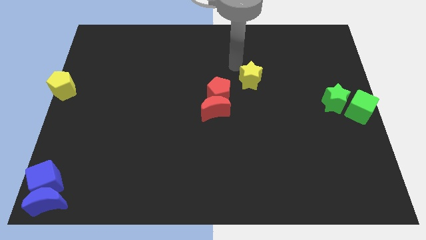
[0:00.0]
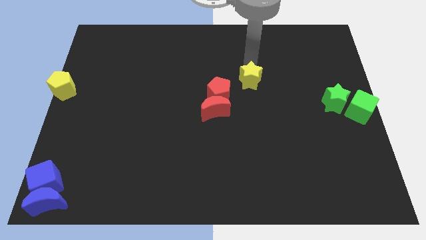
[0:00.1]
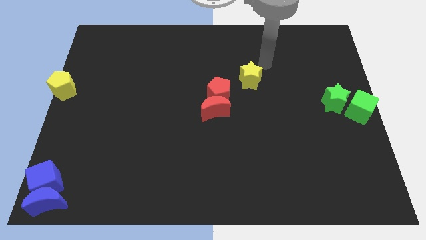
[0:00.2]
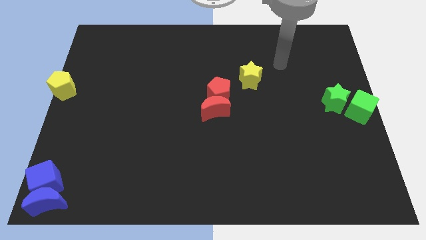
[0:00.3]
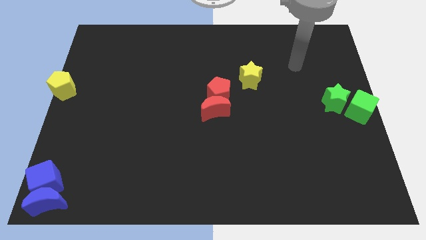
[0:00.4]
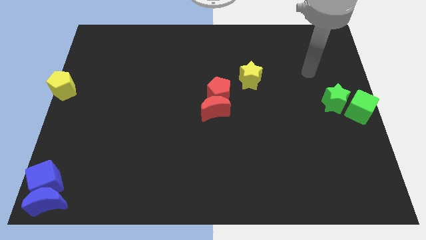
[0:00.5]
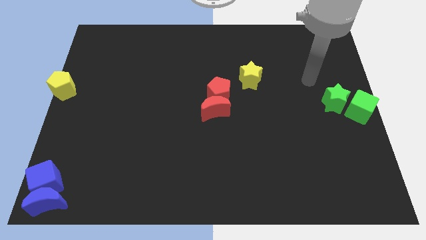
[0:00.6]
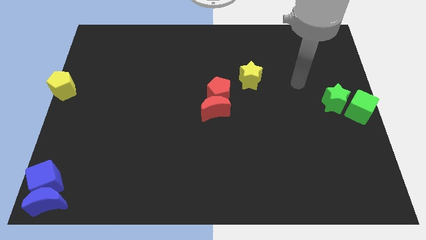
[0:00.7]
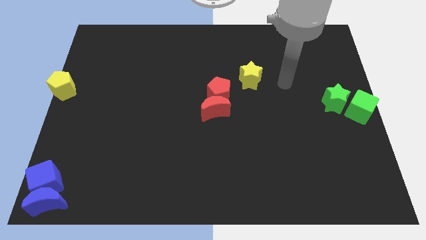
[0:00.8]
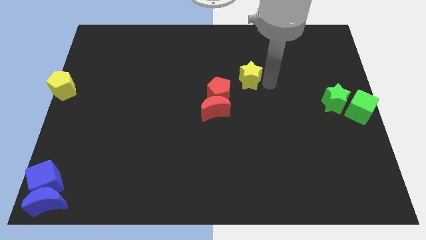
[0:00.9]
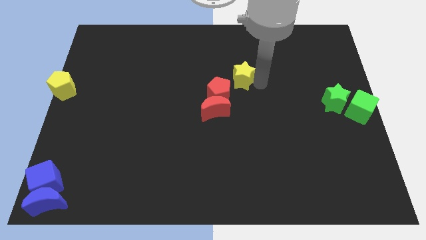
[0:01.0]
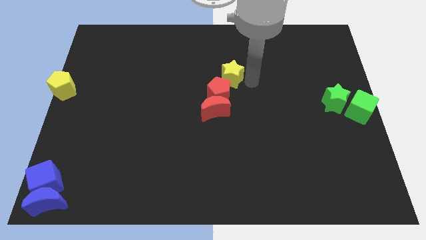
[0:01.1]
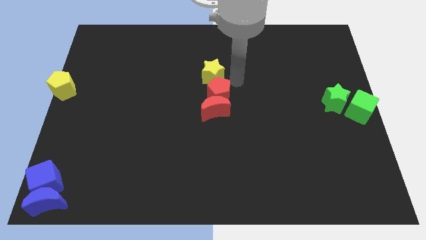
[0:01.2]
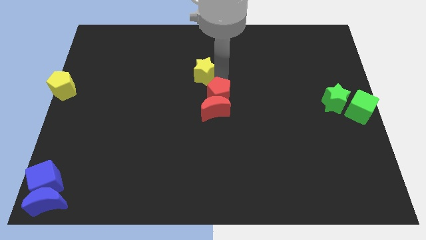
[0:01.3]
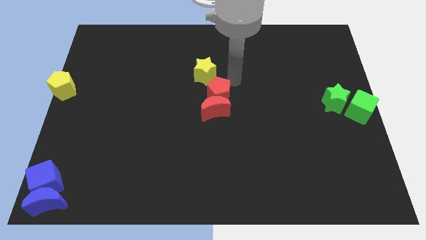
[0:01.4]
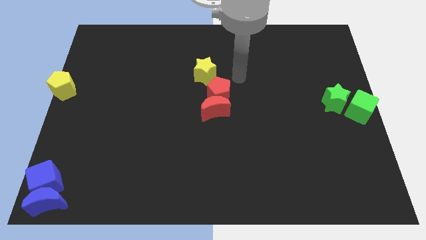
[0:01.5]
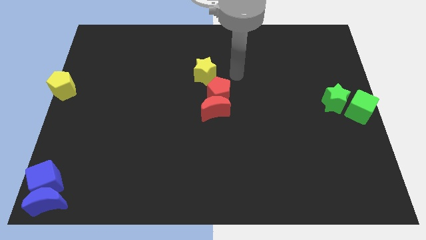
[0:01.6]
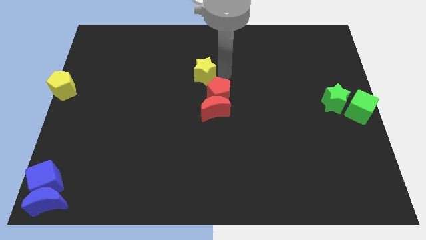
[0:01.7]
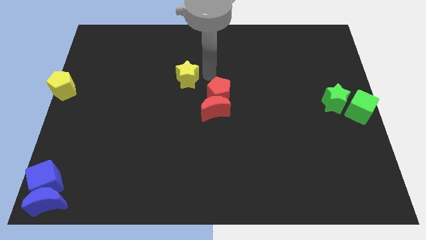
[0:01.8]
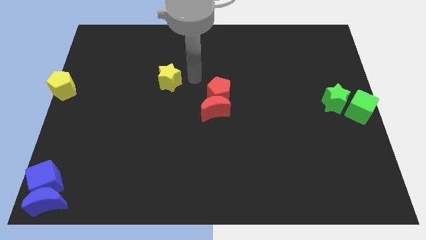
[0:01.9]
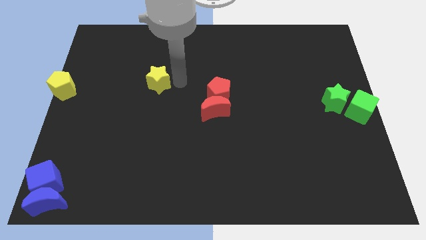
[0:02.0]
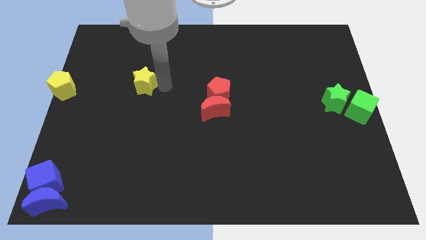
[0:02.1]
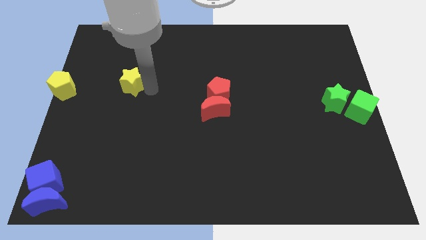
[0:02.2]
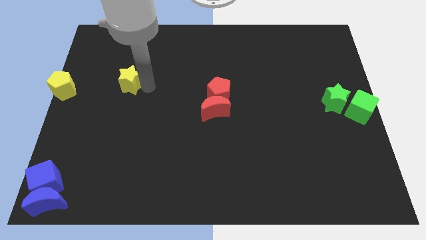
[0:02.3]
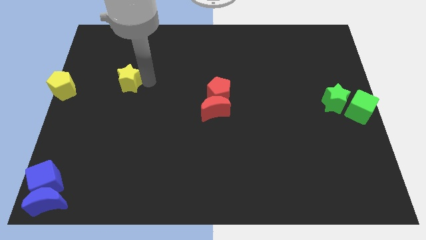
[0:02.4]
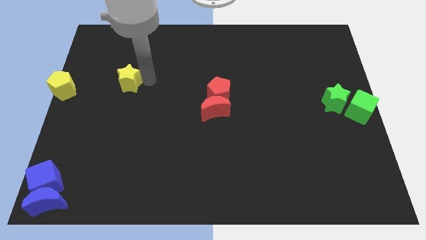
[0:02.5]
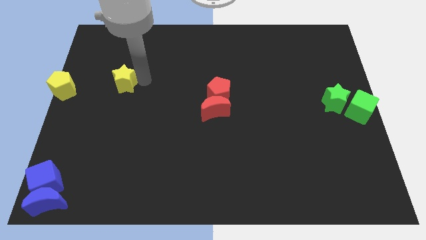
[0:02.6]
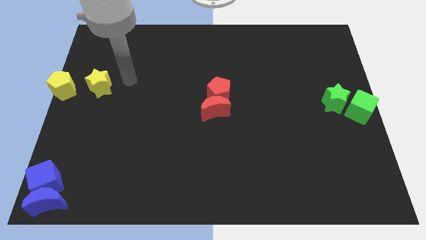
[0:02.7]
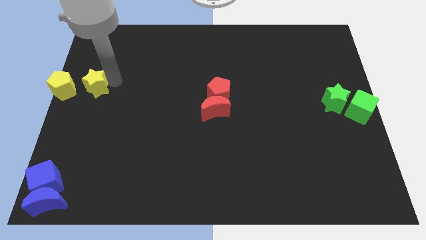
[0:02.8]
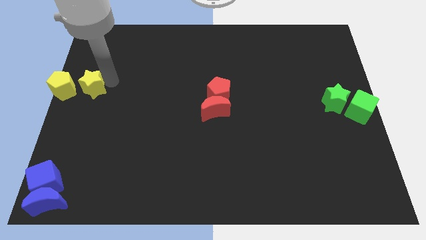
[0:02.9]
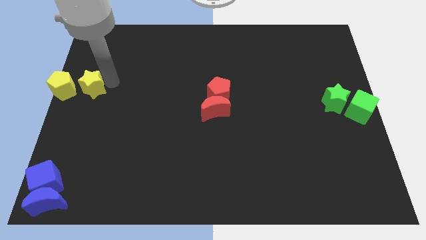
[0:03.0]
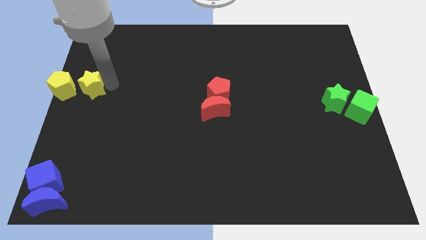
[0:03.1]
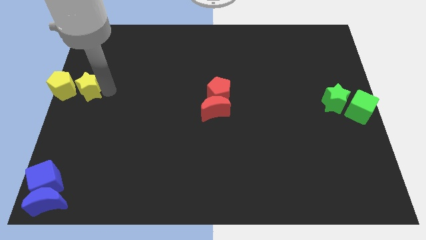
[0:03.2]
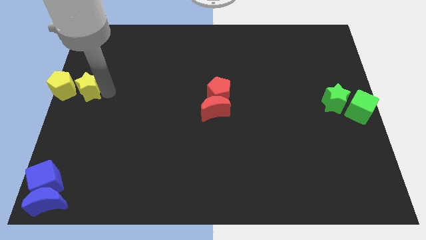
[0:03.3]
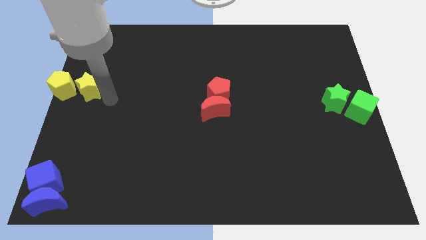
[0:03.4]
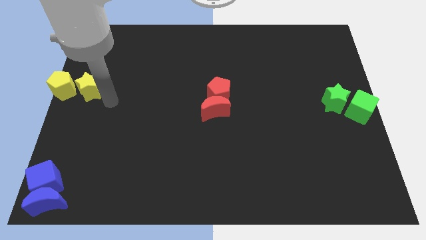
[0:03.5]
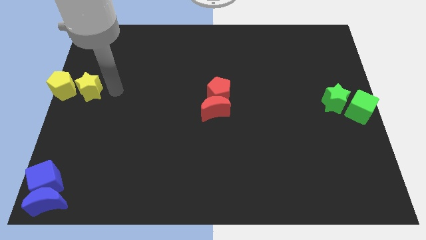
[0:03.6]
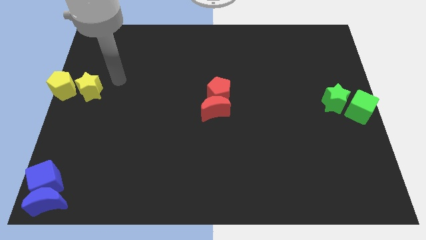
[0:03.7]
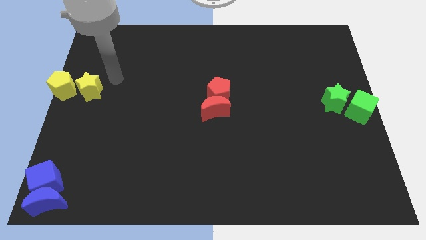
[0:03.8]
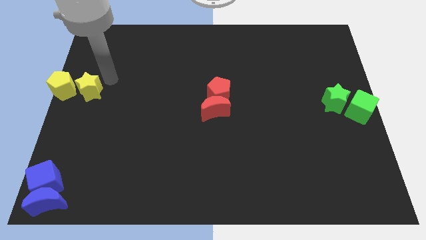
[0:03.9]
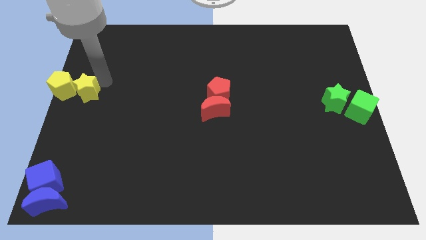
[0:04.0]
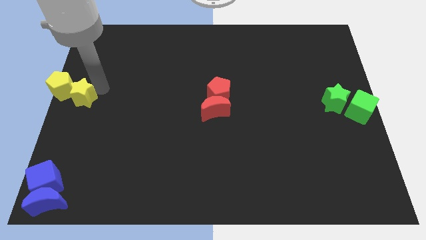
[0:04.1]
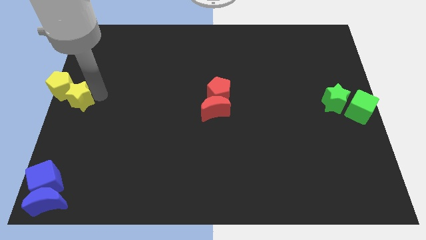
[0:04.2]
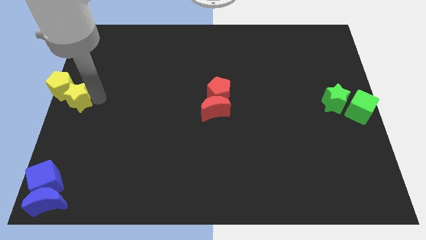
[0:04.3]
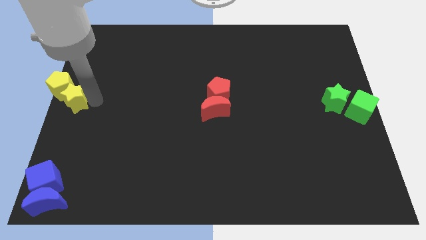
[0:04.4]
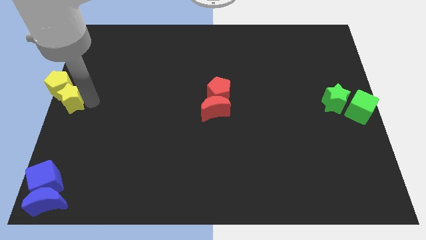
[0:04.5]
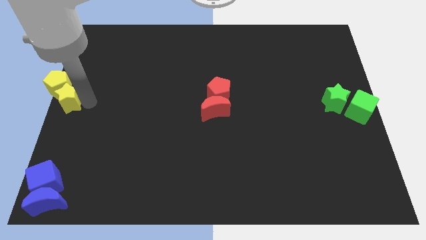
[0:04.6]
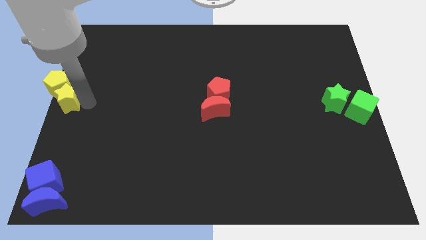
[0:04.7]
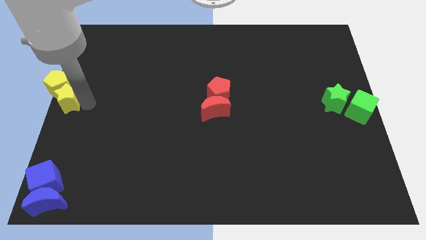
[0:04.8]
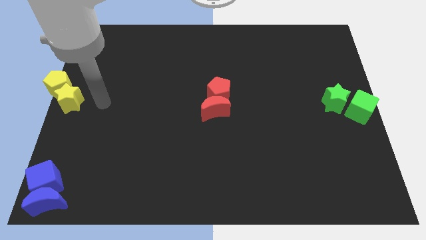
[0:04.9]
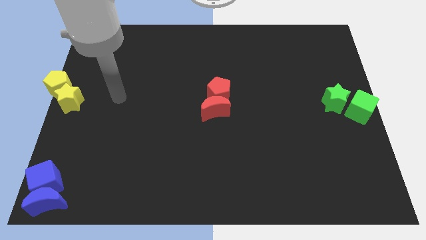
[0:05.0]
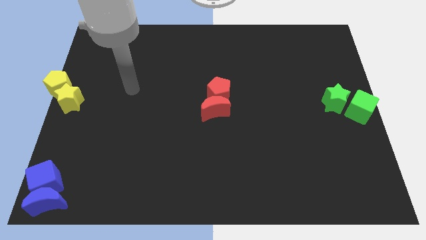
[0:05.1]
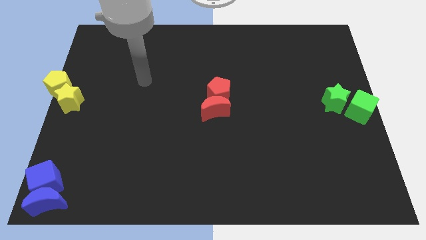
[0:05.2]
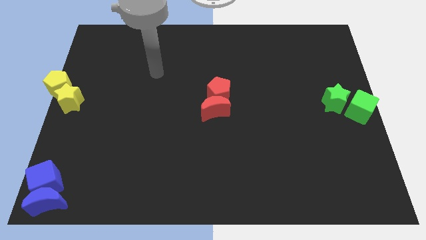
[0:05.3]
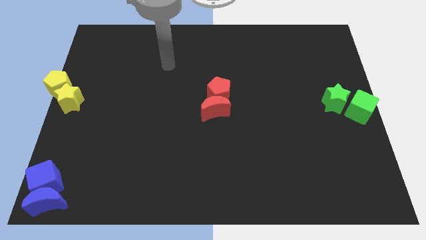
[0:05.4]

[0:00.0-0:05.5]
move the yellow star into the yellow pentagon

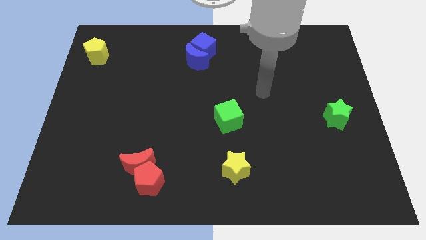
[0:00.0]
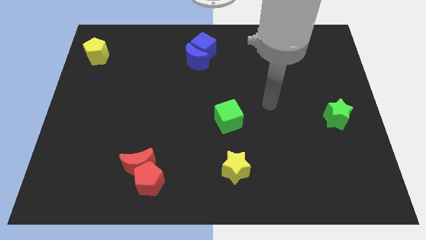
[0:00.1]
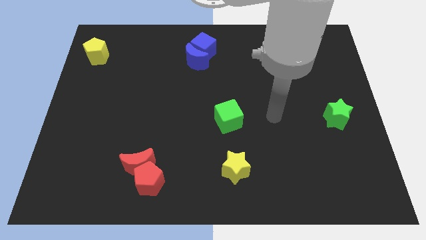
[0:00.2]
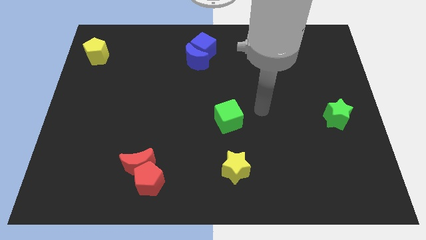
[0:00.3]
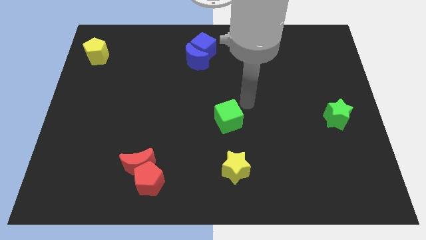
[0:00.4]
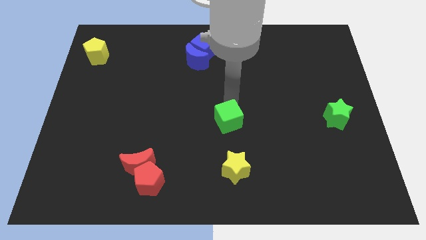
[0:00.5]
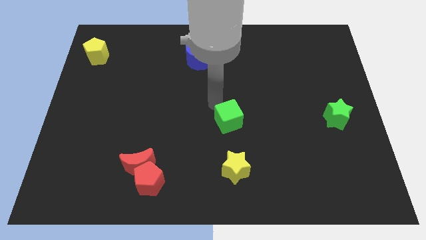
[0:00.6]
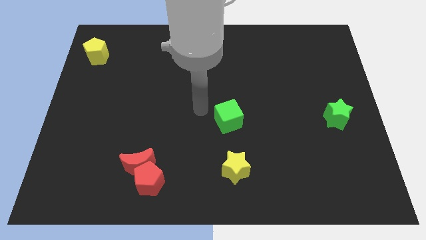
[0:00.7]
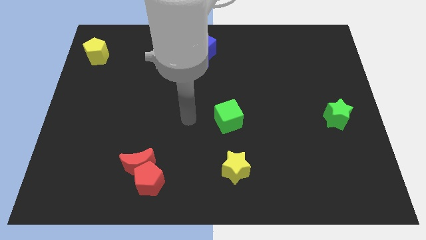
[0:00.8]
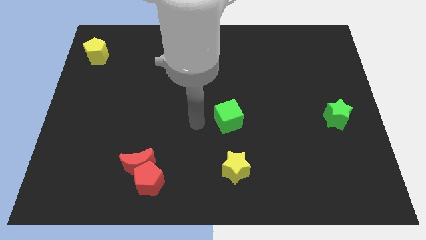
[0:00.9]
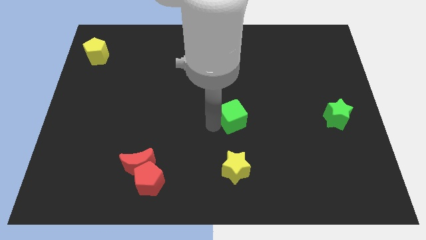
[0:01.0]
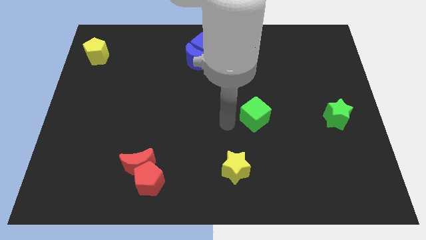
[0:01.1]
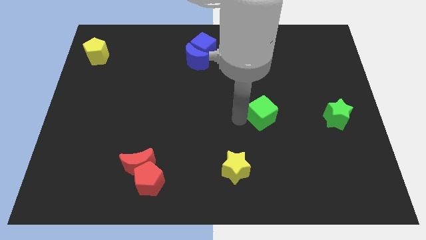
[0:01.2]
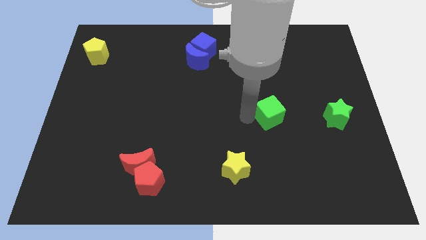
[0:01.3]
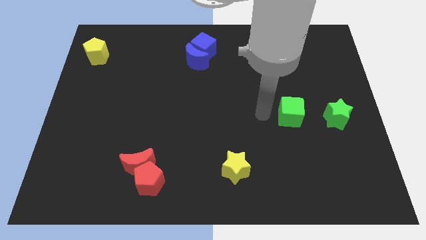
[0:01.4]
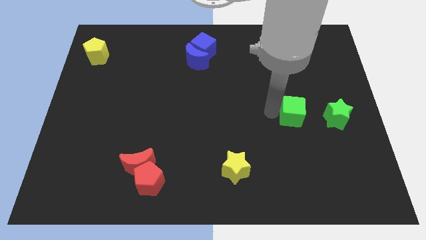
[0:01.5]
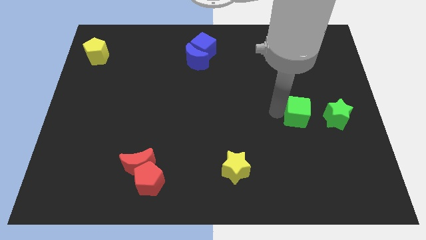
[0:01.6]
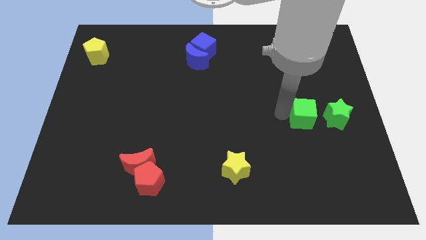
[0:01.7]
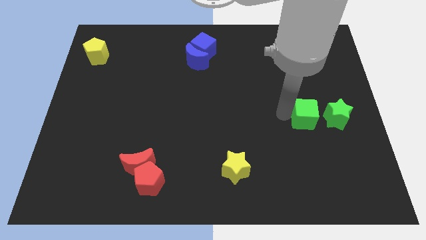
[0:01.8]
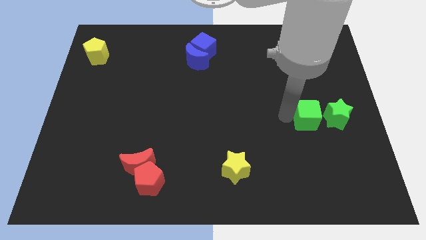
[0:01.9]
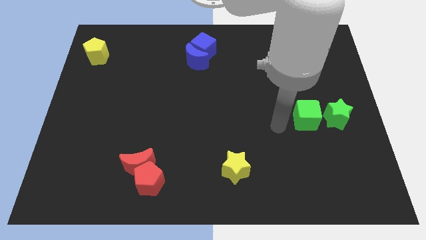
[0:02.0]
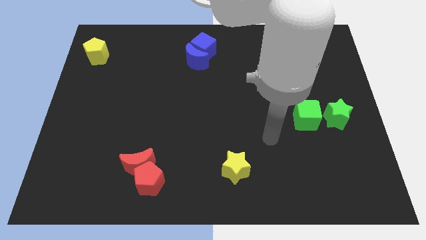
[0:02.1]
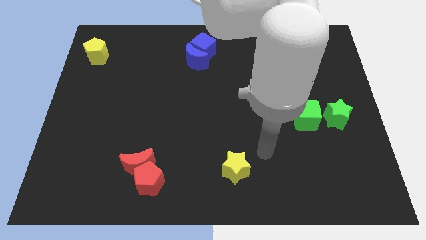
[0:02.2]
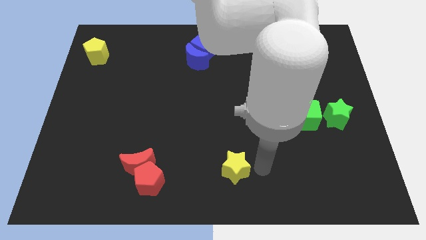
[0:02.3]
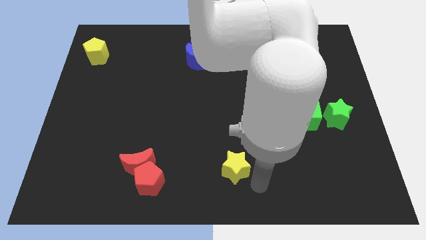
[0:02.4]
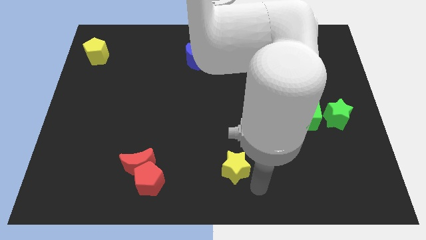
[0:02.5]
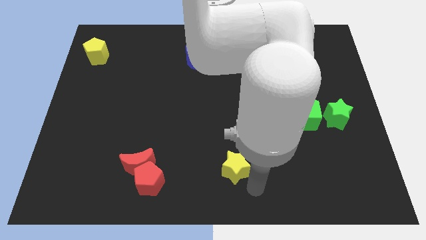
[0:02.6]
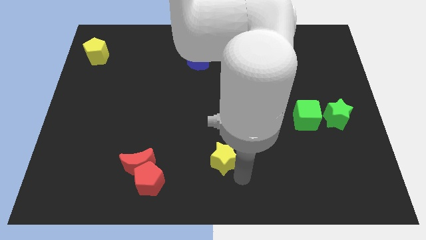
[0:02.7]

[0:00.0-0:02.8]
place the green cube close to the green star

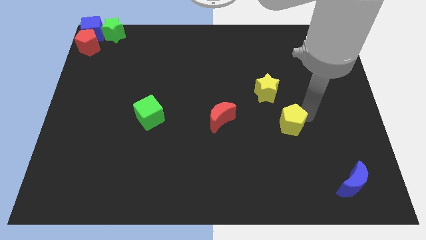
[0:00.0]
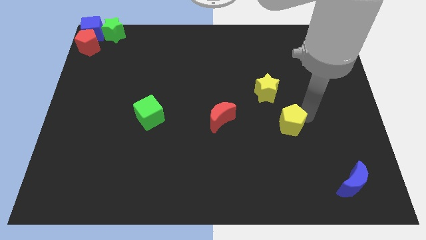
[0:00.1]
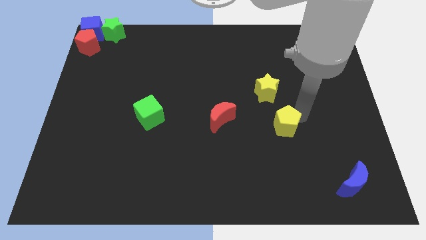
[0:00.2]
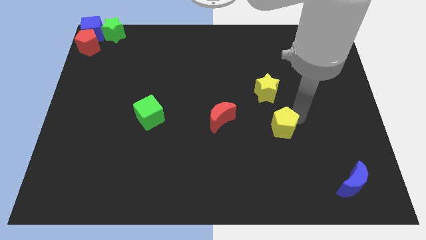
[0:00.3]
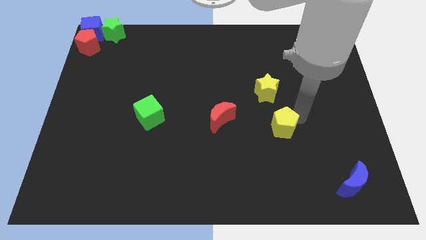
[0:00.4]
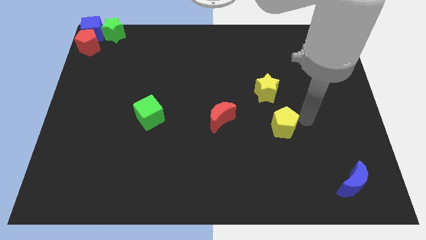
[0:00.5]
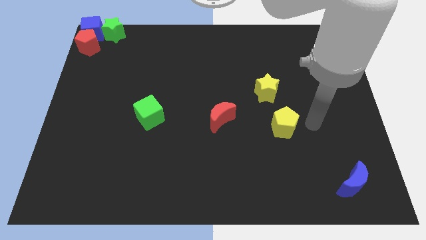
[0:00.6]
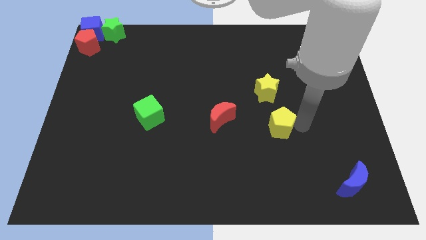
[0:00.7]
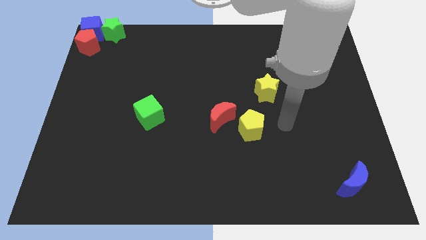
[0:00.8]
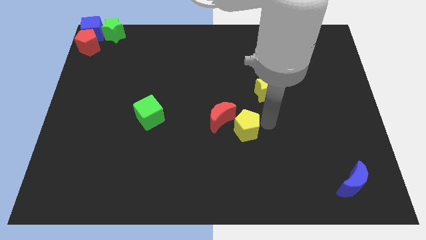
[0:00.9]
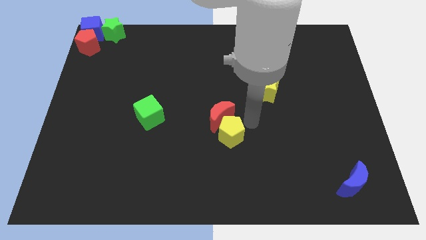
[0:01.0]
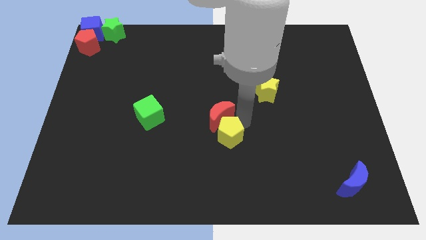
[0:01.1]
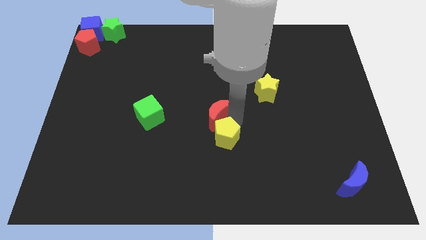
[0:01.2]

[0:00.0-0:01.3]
push the yellow pentagon into the red moon
